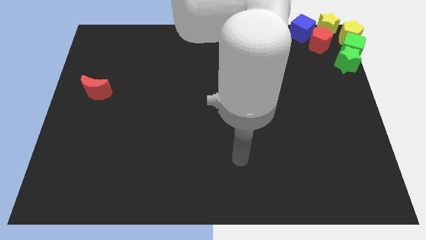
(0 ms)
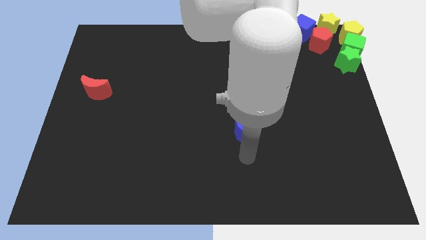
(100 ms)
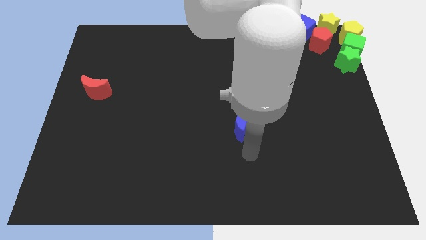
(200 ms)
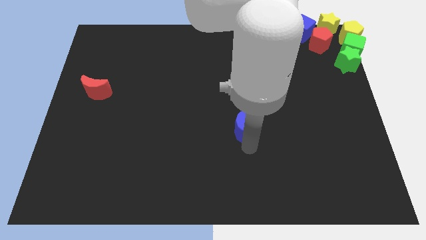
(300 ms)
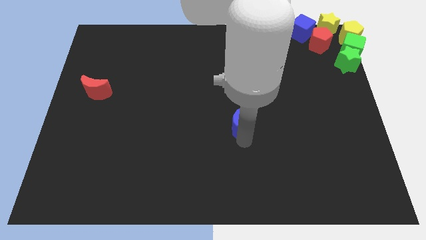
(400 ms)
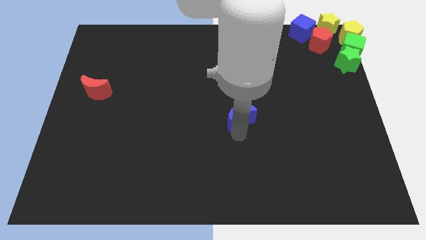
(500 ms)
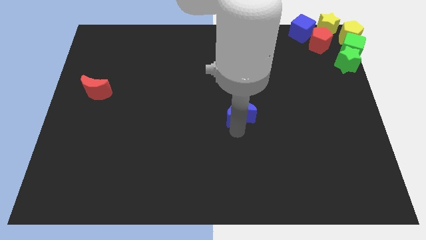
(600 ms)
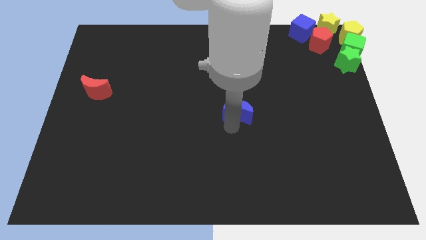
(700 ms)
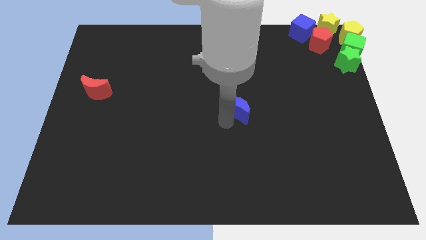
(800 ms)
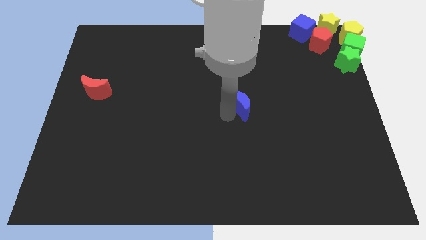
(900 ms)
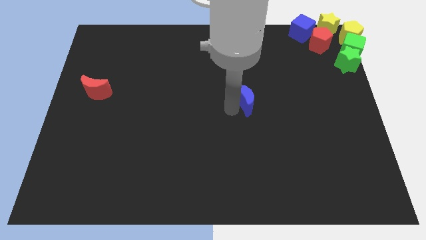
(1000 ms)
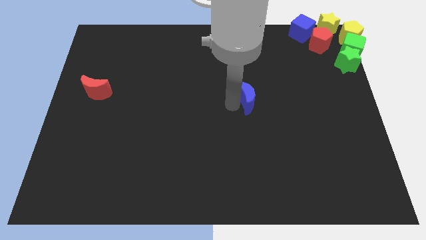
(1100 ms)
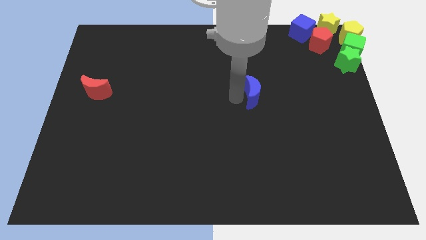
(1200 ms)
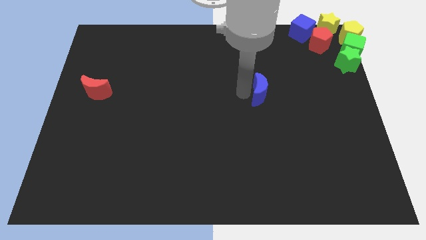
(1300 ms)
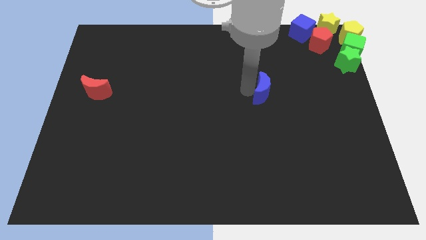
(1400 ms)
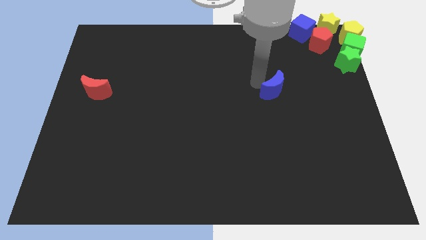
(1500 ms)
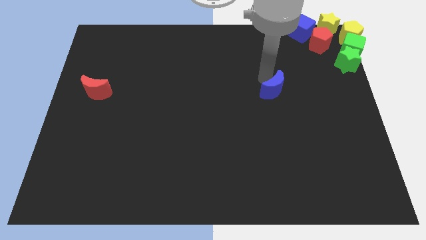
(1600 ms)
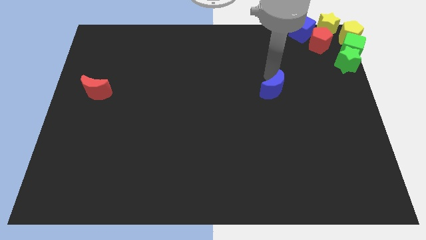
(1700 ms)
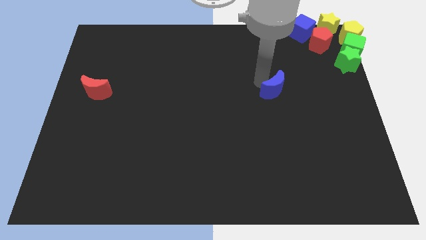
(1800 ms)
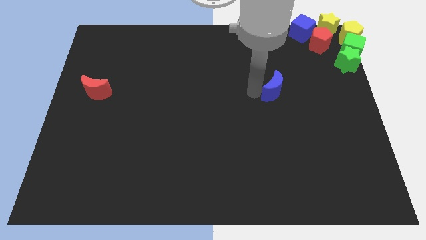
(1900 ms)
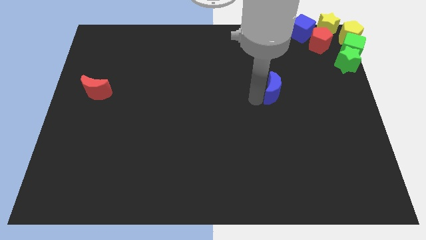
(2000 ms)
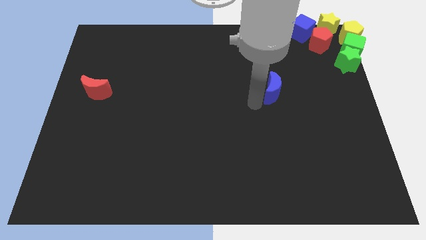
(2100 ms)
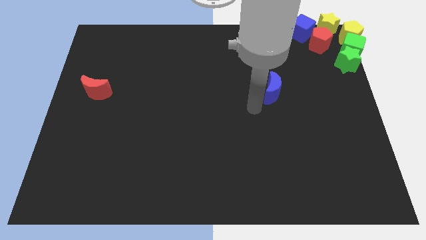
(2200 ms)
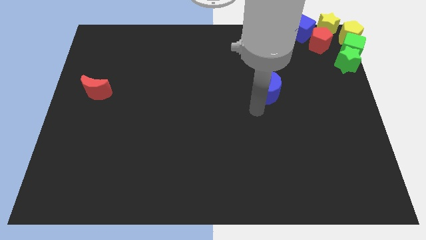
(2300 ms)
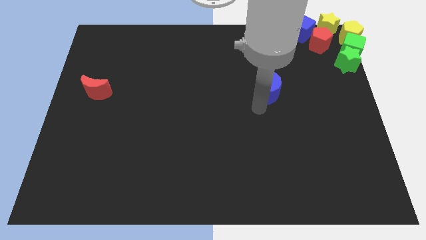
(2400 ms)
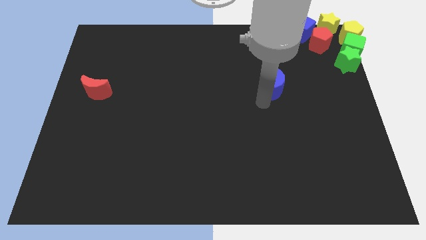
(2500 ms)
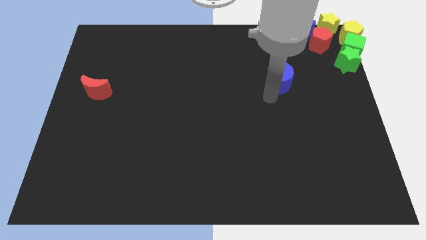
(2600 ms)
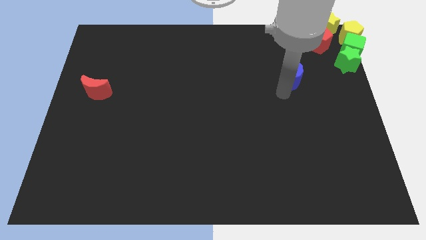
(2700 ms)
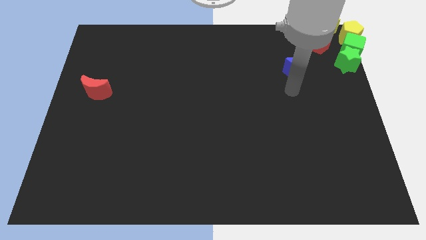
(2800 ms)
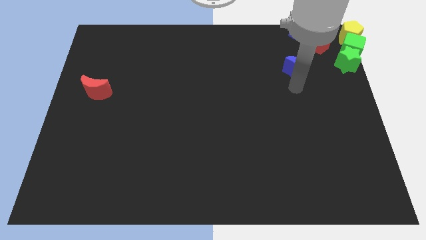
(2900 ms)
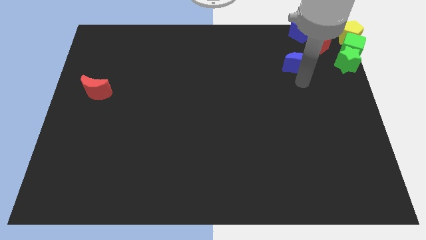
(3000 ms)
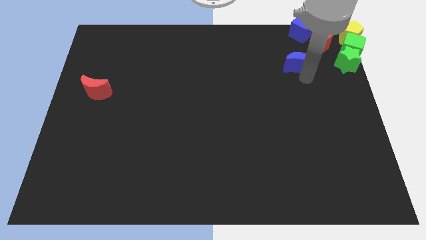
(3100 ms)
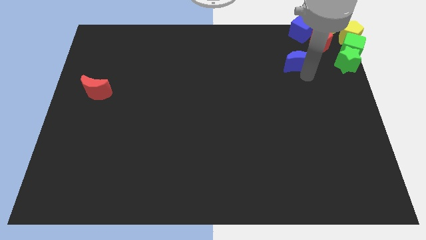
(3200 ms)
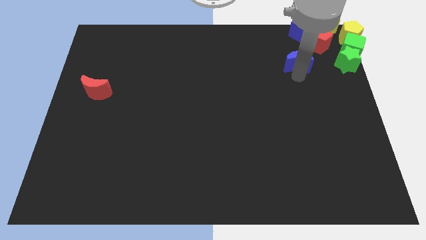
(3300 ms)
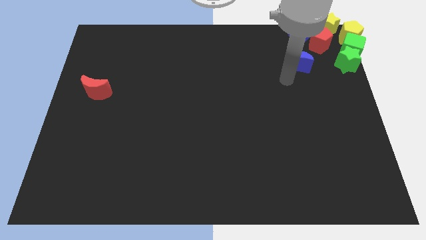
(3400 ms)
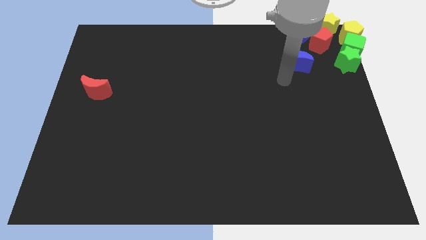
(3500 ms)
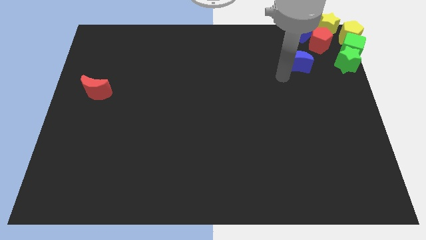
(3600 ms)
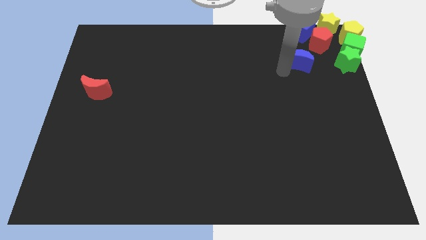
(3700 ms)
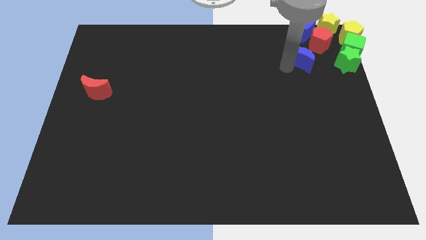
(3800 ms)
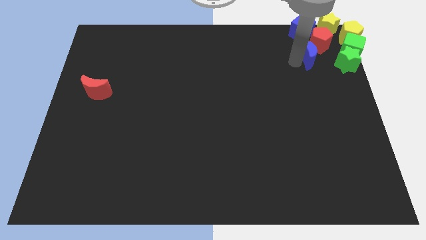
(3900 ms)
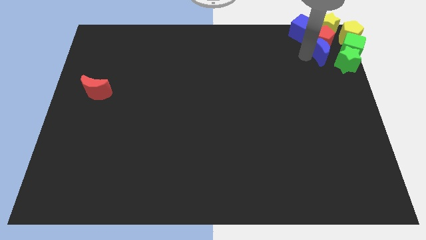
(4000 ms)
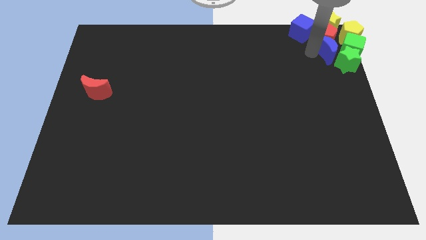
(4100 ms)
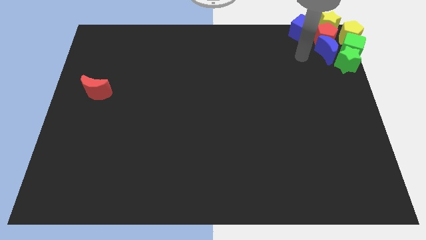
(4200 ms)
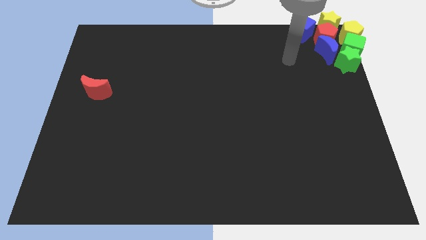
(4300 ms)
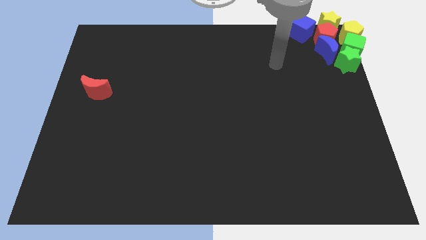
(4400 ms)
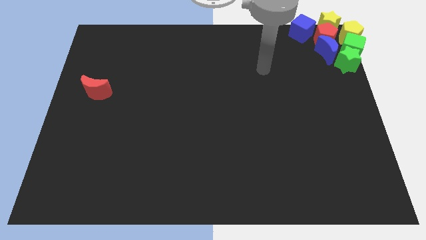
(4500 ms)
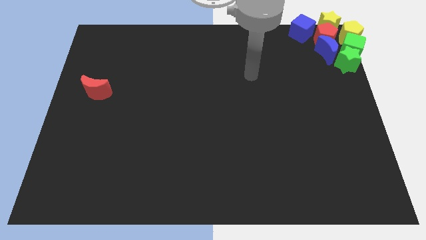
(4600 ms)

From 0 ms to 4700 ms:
push the blue crescent into the group of blocks at the top right corner of the board

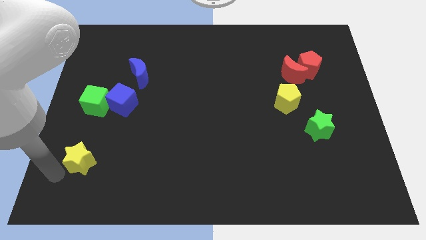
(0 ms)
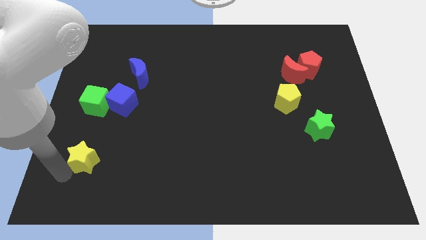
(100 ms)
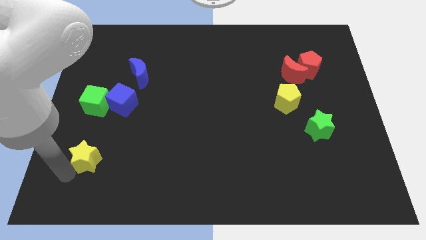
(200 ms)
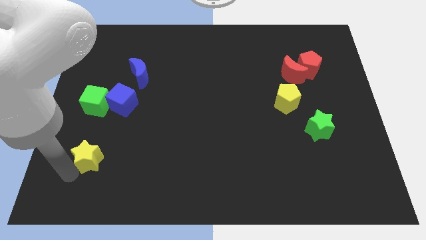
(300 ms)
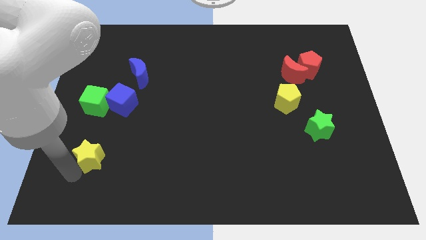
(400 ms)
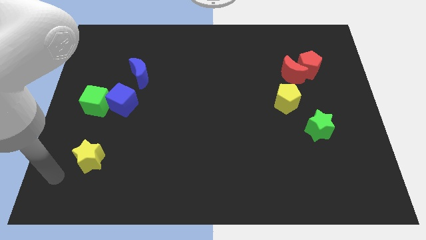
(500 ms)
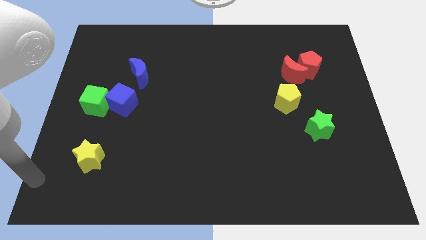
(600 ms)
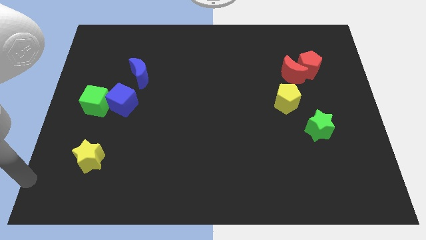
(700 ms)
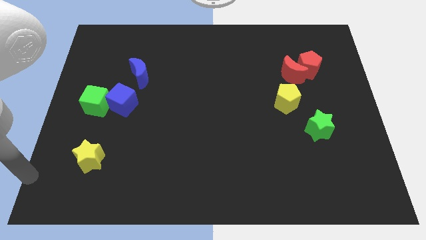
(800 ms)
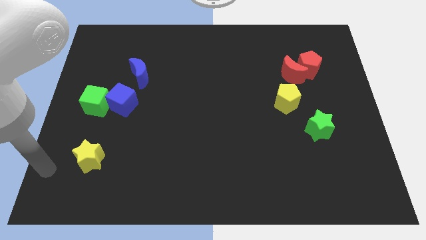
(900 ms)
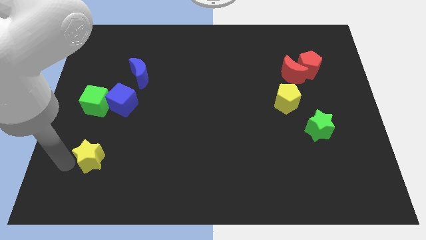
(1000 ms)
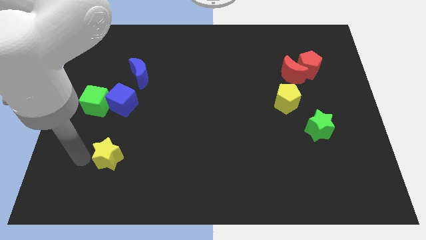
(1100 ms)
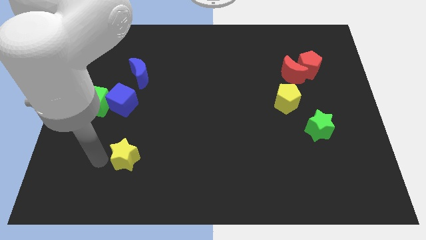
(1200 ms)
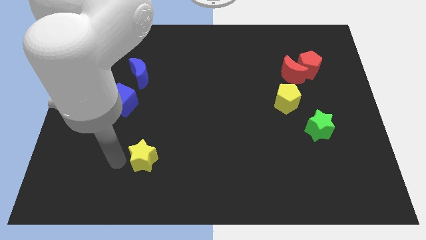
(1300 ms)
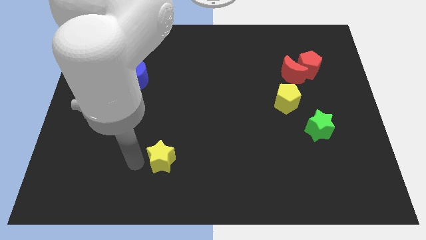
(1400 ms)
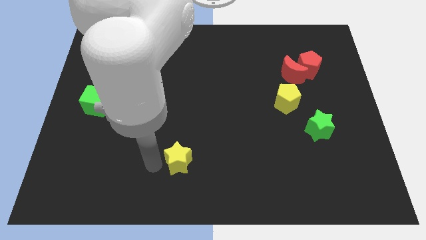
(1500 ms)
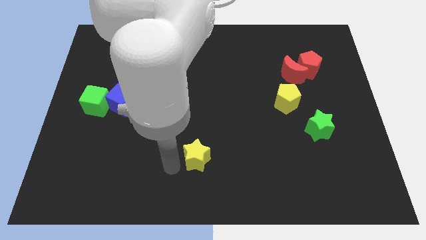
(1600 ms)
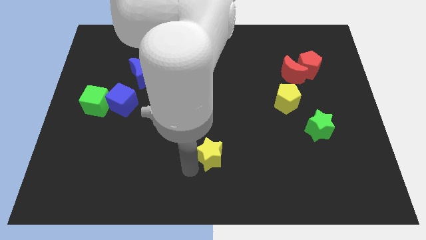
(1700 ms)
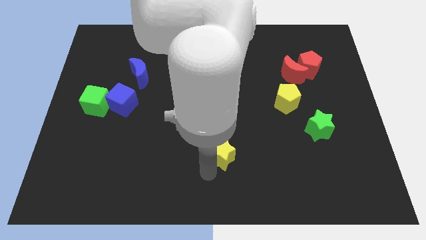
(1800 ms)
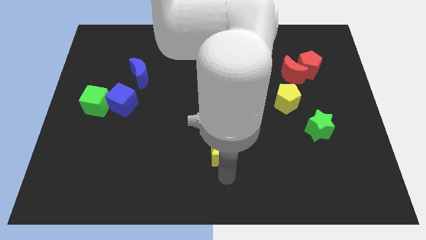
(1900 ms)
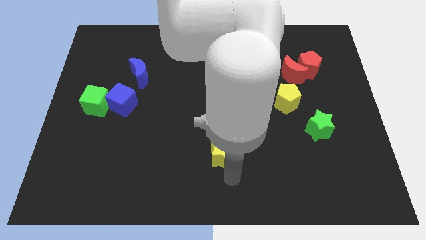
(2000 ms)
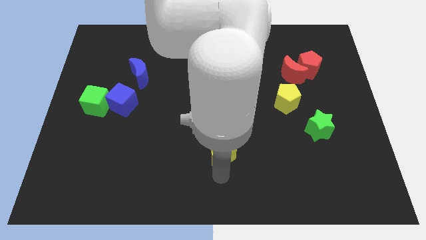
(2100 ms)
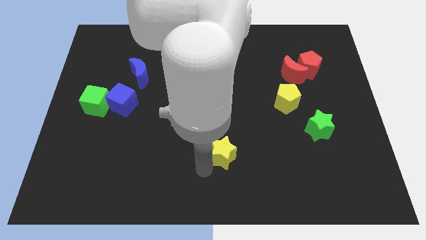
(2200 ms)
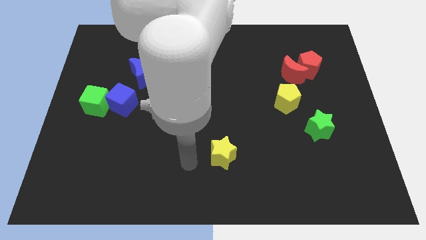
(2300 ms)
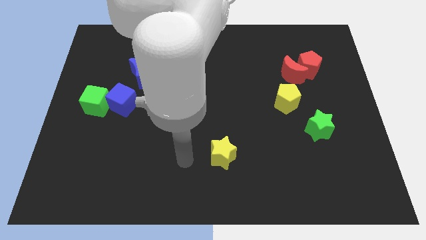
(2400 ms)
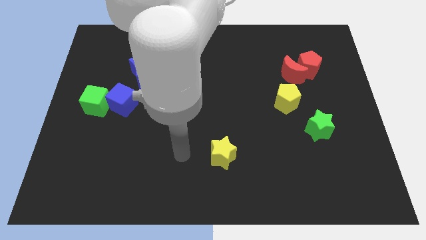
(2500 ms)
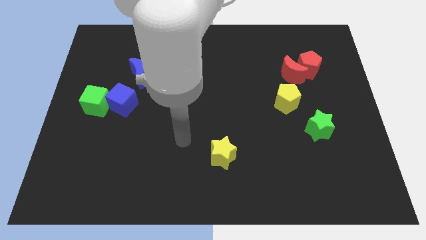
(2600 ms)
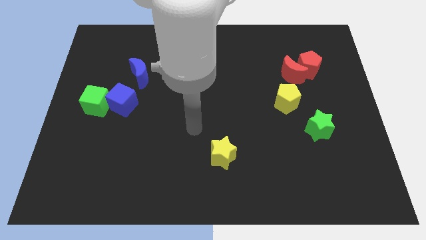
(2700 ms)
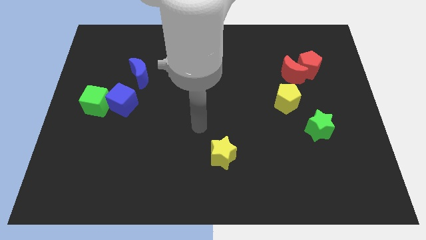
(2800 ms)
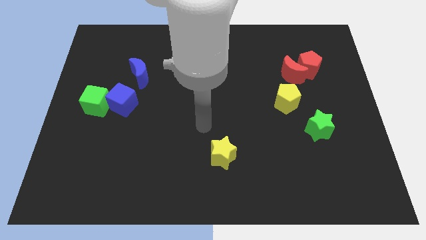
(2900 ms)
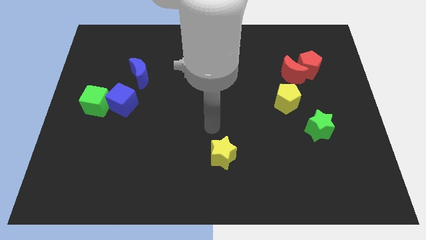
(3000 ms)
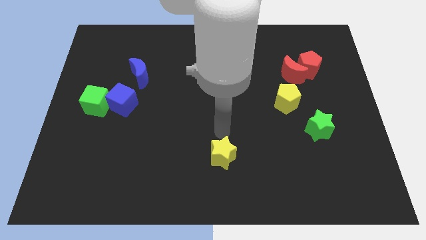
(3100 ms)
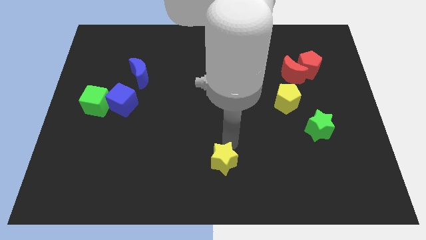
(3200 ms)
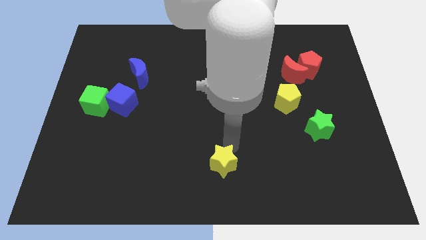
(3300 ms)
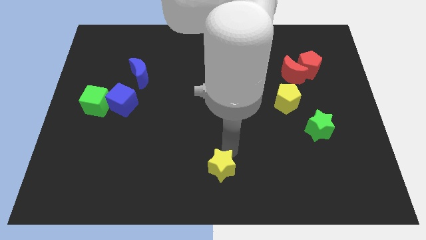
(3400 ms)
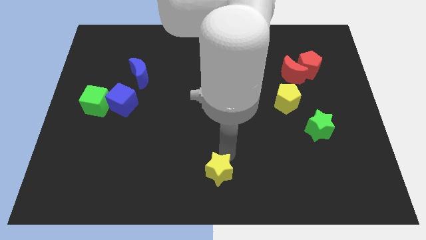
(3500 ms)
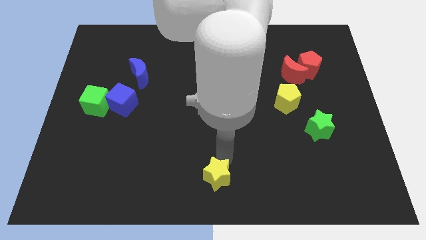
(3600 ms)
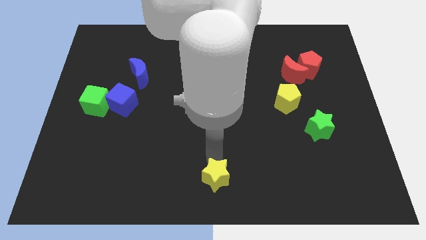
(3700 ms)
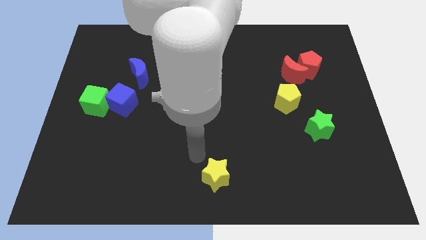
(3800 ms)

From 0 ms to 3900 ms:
push the yellow star to the bottom center of the board

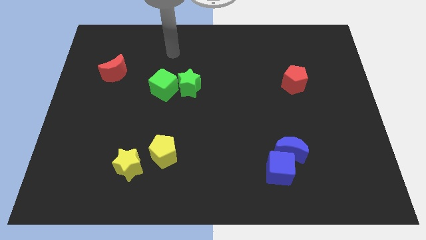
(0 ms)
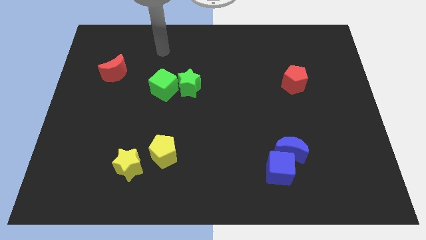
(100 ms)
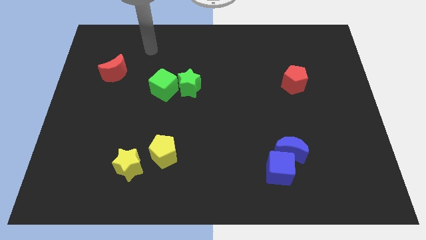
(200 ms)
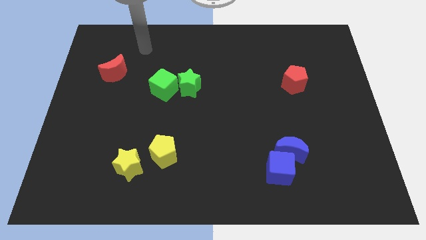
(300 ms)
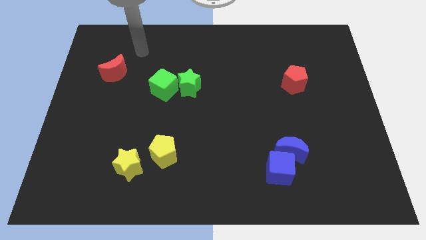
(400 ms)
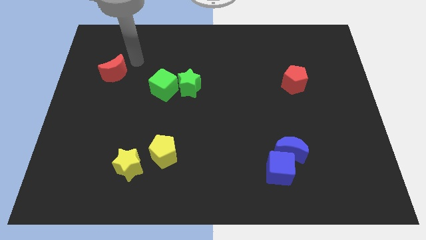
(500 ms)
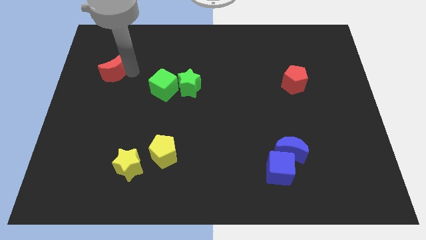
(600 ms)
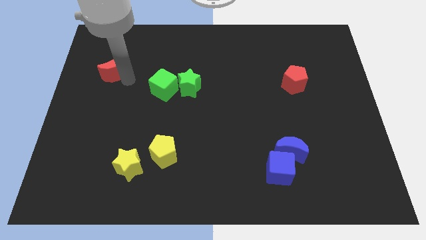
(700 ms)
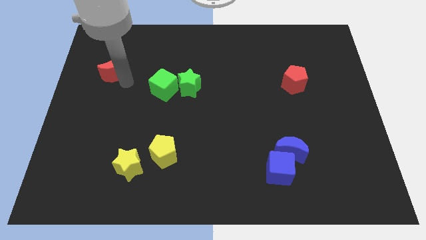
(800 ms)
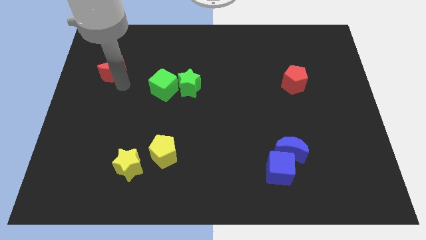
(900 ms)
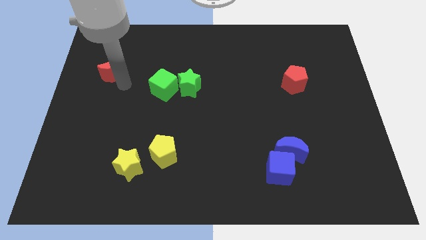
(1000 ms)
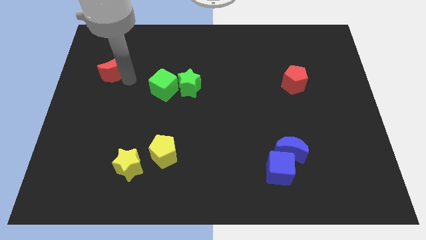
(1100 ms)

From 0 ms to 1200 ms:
move your arm below the red crescent
